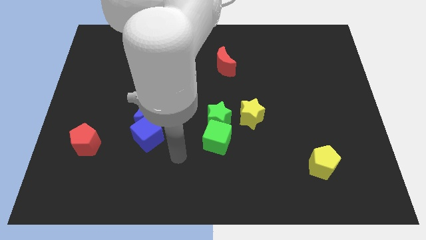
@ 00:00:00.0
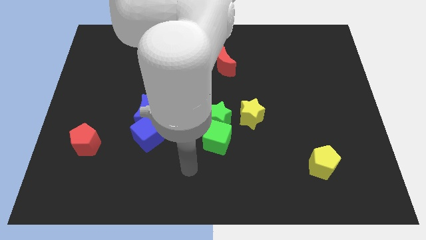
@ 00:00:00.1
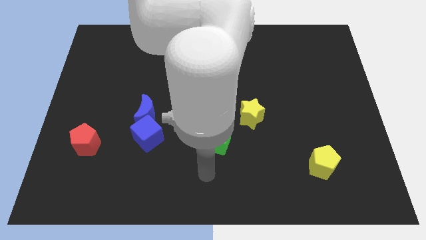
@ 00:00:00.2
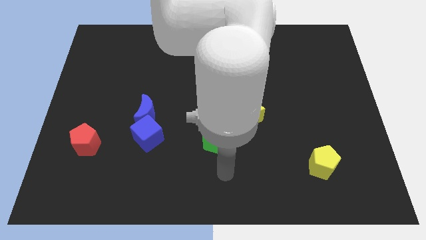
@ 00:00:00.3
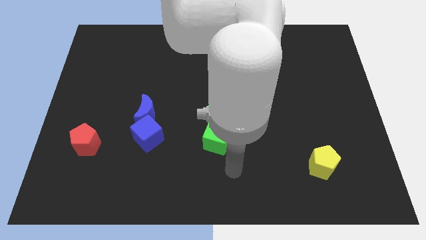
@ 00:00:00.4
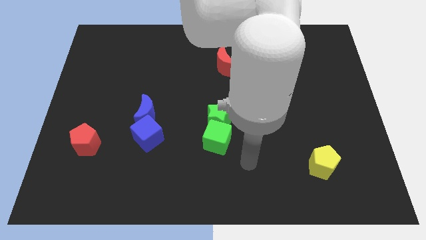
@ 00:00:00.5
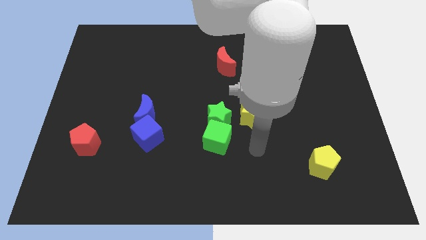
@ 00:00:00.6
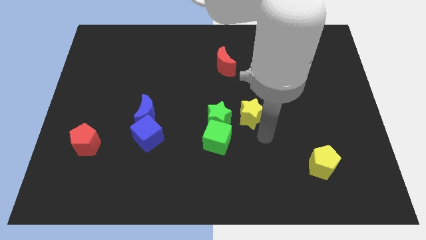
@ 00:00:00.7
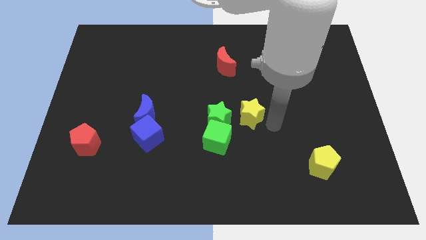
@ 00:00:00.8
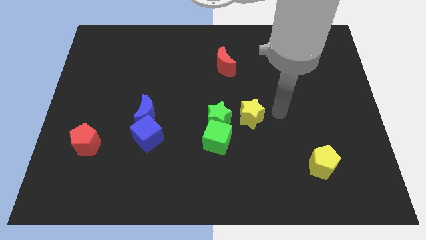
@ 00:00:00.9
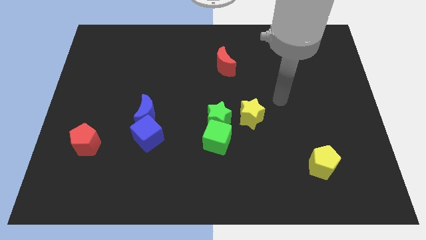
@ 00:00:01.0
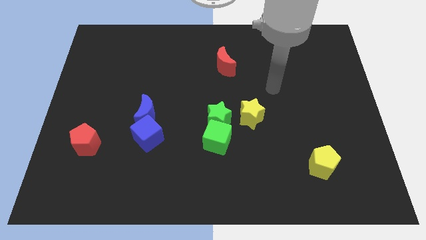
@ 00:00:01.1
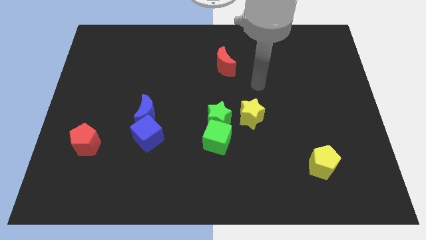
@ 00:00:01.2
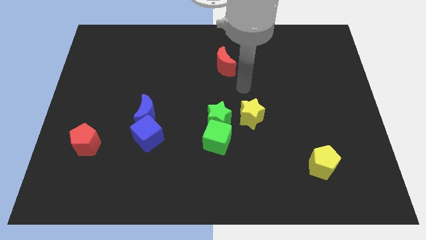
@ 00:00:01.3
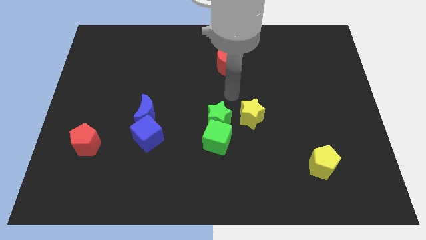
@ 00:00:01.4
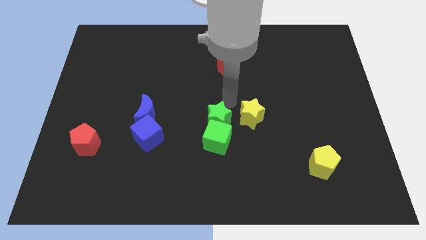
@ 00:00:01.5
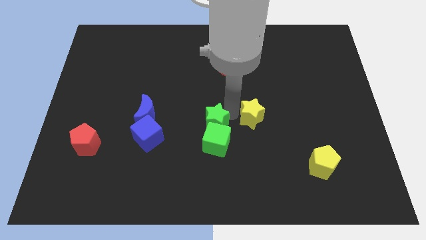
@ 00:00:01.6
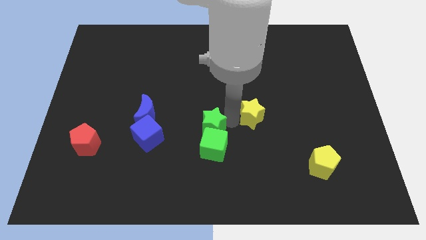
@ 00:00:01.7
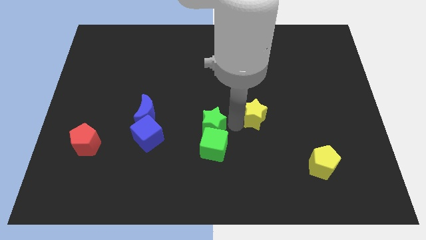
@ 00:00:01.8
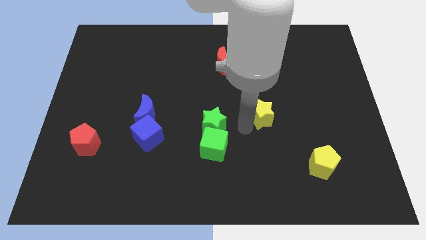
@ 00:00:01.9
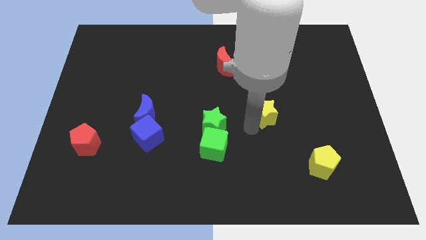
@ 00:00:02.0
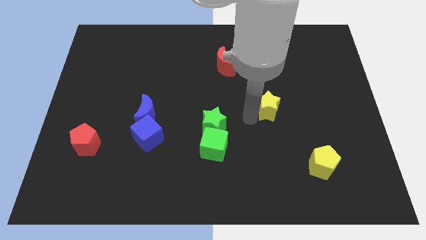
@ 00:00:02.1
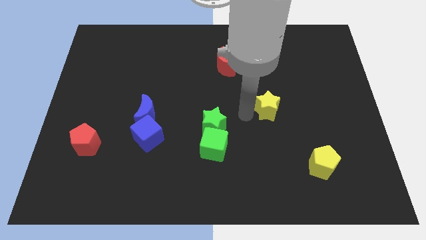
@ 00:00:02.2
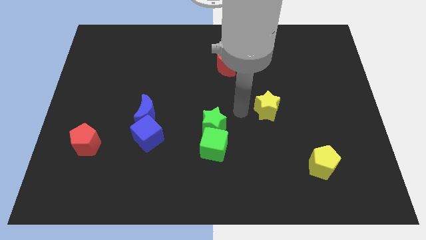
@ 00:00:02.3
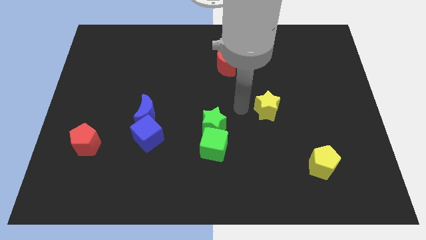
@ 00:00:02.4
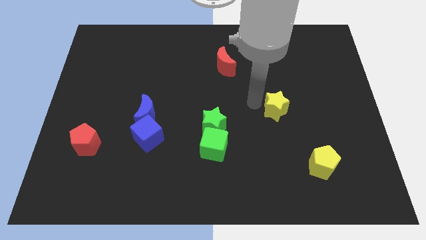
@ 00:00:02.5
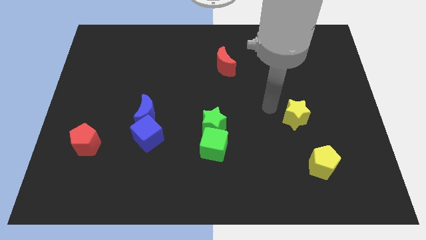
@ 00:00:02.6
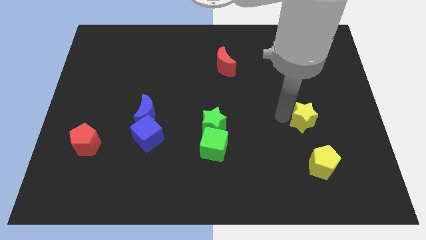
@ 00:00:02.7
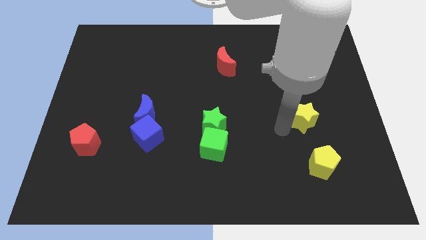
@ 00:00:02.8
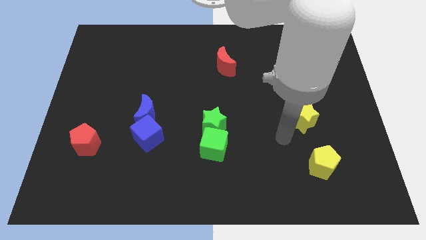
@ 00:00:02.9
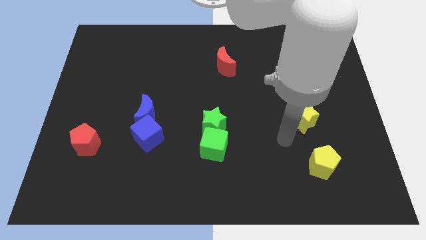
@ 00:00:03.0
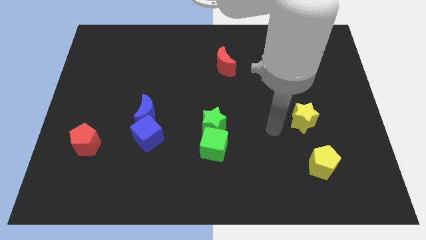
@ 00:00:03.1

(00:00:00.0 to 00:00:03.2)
move the yellow star away from the green star

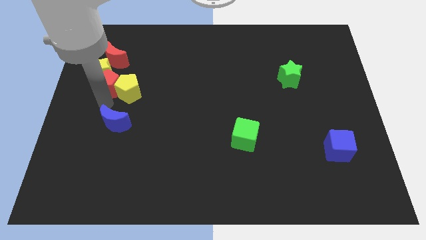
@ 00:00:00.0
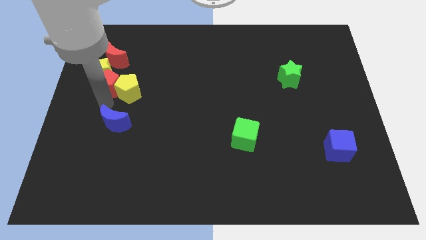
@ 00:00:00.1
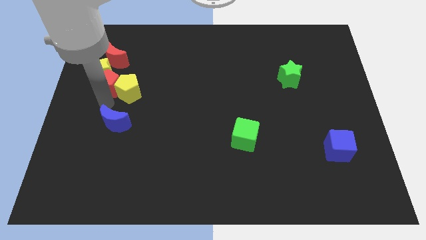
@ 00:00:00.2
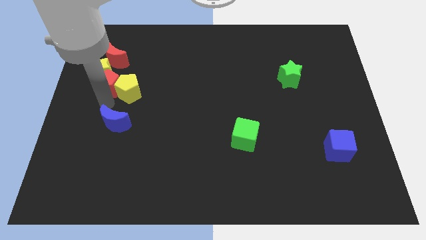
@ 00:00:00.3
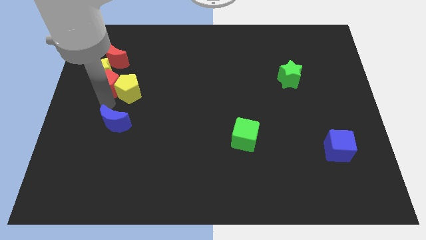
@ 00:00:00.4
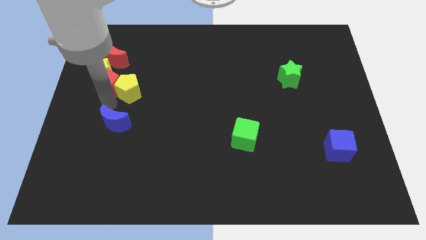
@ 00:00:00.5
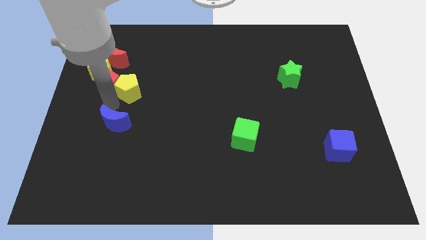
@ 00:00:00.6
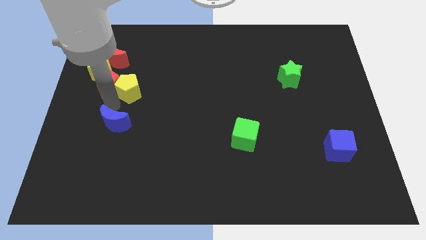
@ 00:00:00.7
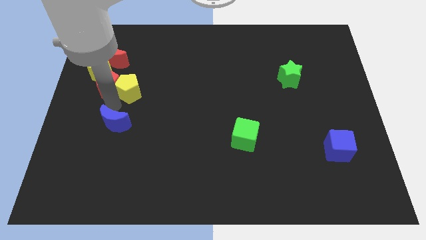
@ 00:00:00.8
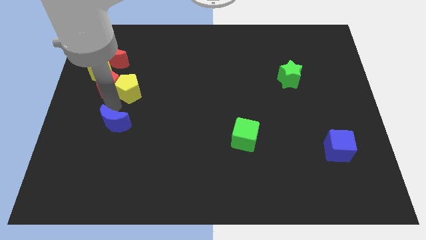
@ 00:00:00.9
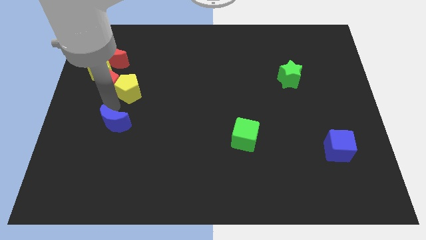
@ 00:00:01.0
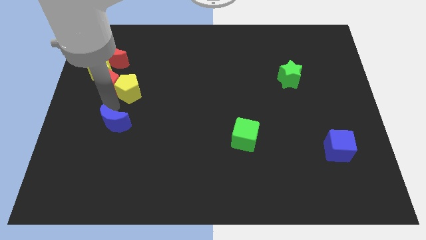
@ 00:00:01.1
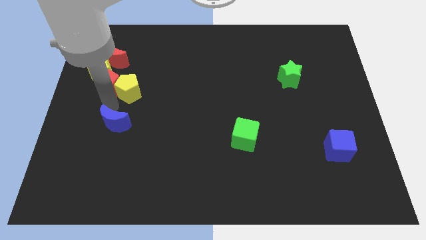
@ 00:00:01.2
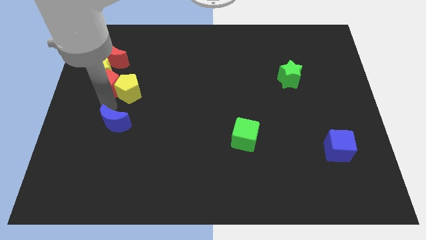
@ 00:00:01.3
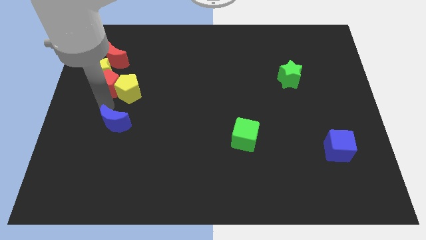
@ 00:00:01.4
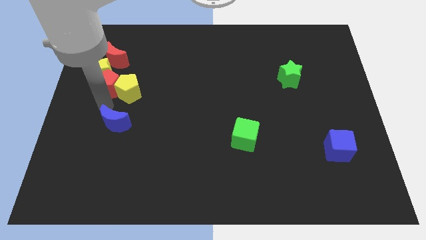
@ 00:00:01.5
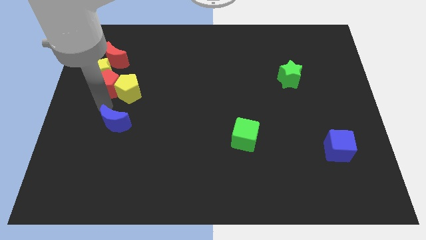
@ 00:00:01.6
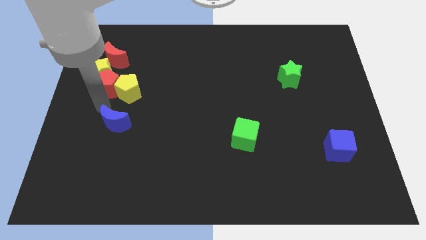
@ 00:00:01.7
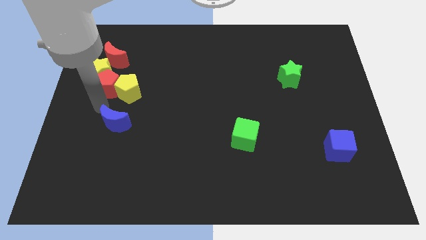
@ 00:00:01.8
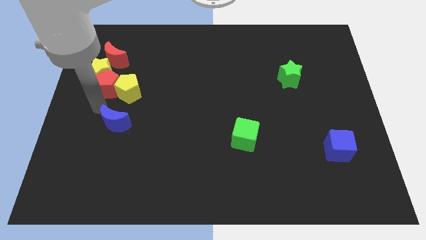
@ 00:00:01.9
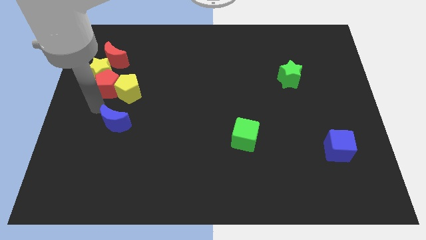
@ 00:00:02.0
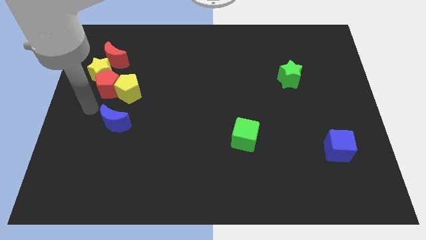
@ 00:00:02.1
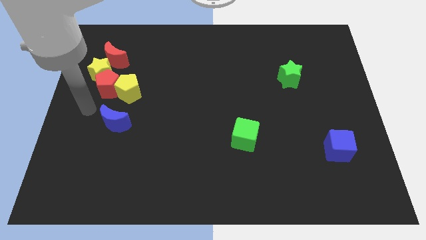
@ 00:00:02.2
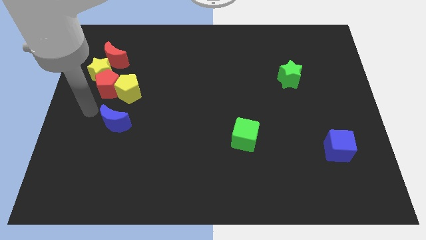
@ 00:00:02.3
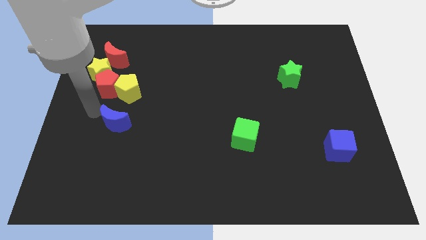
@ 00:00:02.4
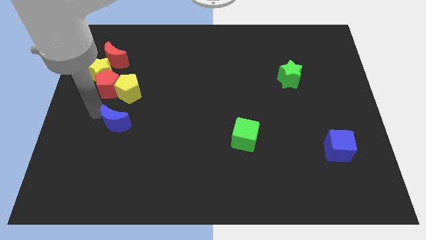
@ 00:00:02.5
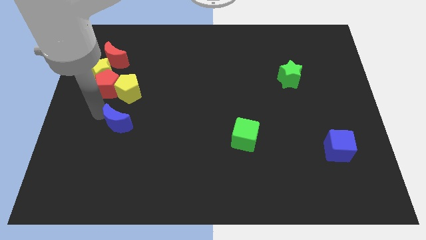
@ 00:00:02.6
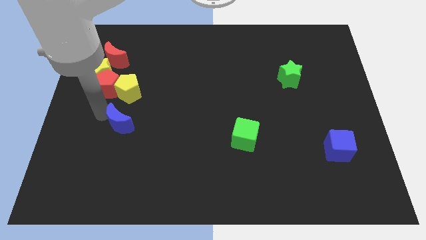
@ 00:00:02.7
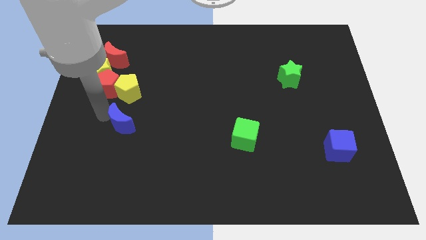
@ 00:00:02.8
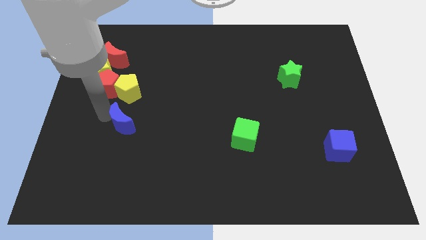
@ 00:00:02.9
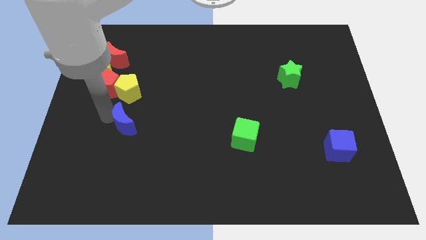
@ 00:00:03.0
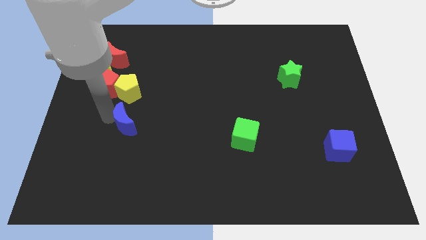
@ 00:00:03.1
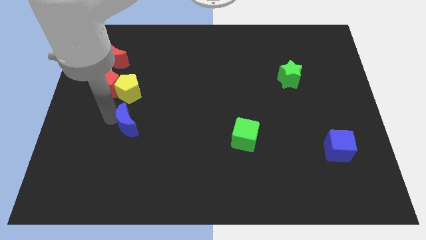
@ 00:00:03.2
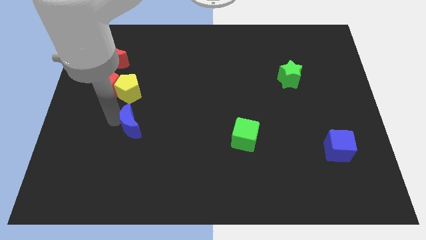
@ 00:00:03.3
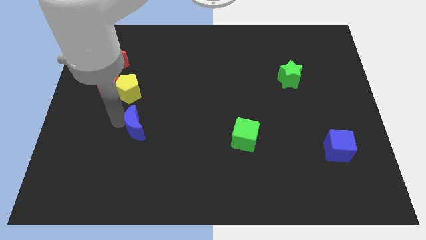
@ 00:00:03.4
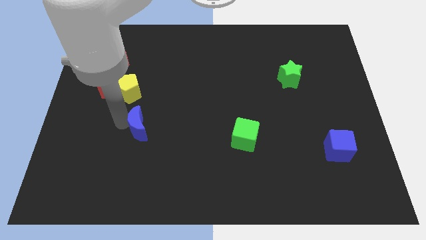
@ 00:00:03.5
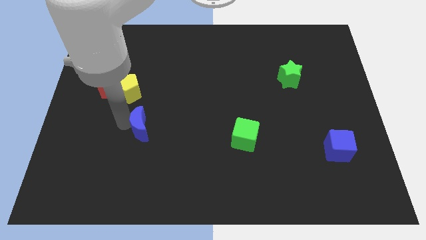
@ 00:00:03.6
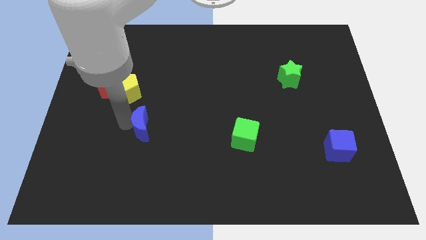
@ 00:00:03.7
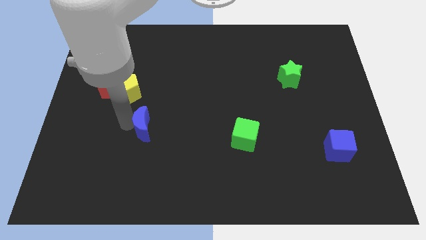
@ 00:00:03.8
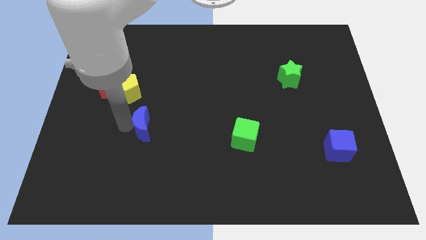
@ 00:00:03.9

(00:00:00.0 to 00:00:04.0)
place the blue crescent diagonally below the yellow pentagon

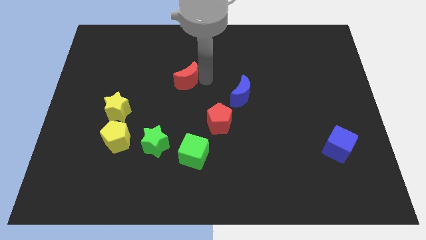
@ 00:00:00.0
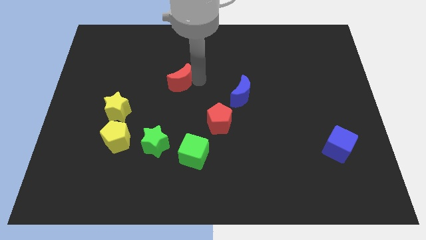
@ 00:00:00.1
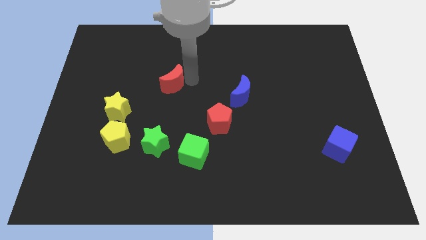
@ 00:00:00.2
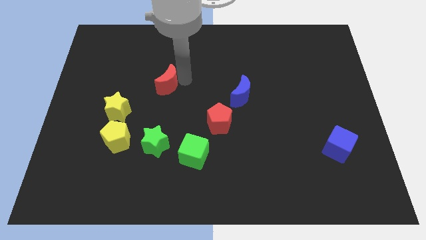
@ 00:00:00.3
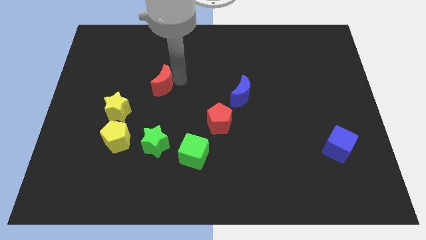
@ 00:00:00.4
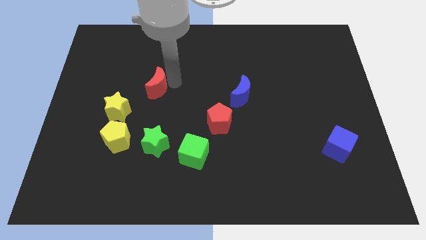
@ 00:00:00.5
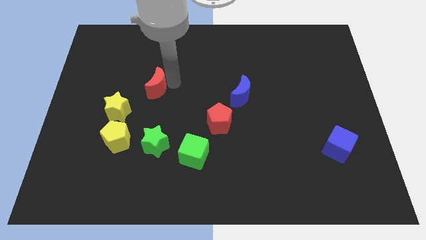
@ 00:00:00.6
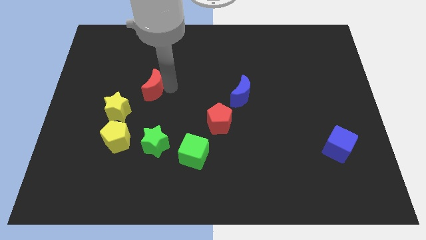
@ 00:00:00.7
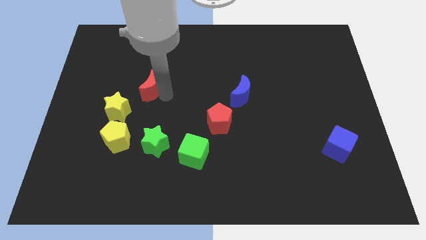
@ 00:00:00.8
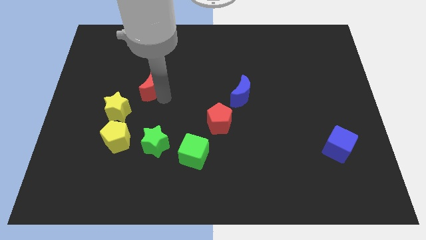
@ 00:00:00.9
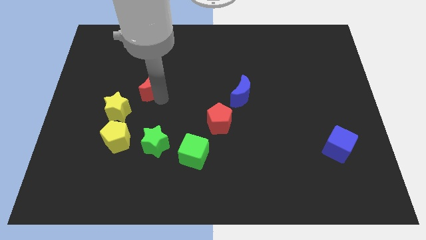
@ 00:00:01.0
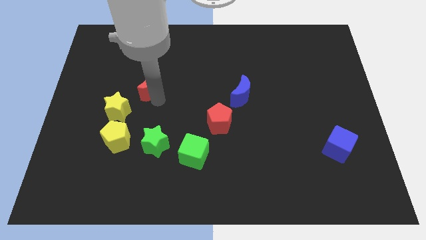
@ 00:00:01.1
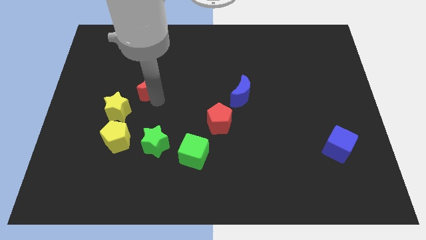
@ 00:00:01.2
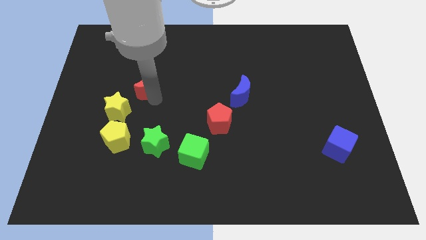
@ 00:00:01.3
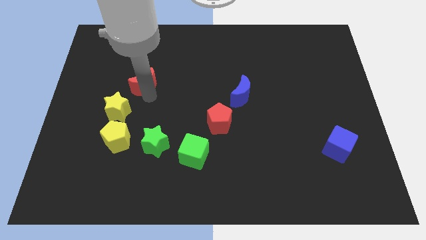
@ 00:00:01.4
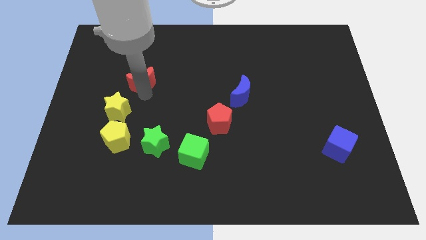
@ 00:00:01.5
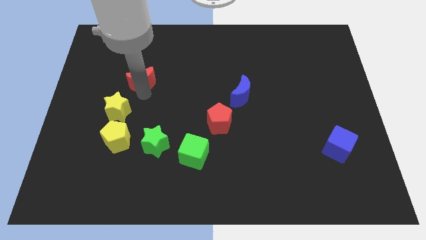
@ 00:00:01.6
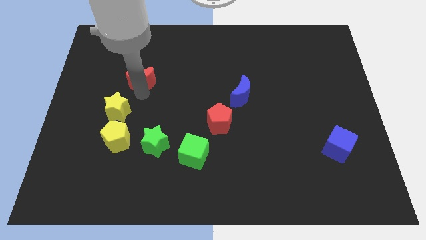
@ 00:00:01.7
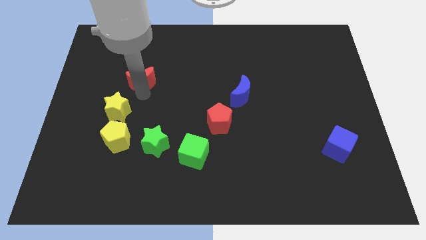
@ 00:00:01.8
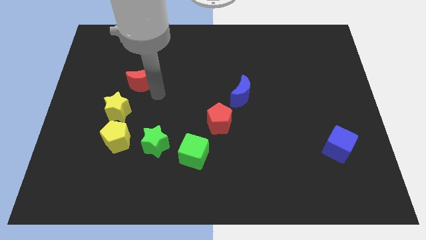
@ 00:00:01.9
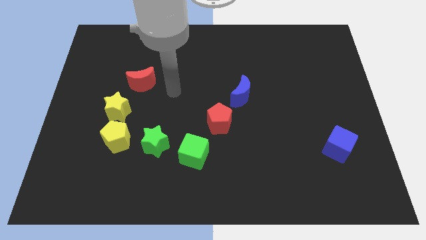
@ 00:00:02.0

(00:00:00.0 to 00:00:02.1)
move the red crescent towards the yellow star
